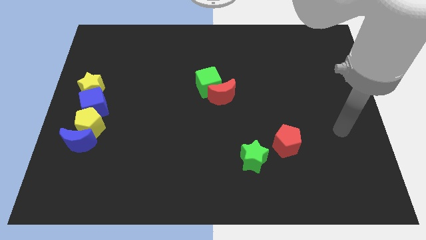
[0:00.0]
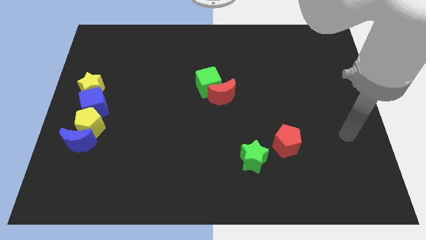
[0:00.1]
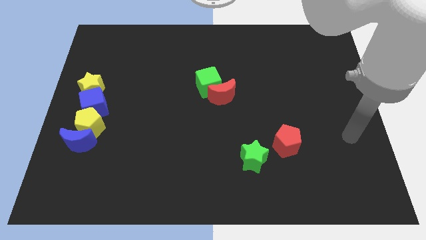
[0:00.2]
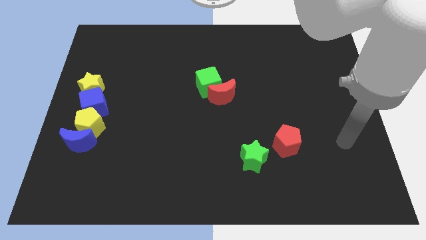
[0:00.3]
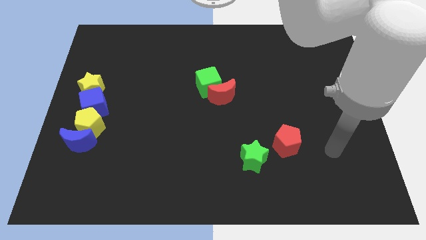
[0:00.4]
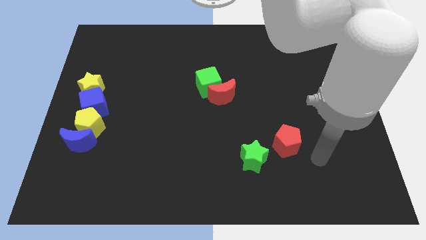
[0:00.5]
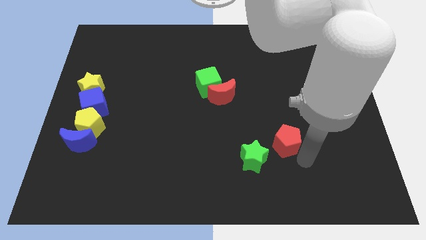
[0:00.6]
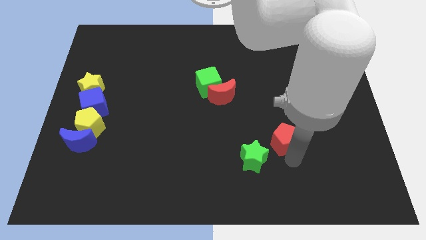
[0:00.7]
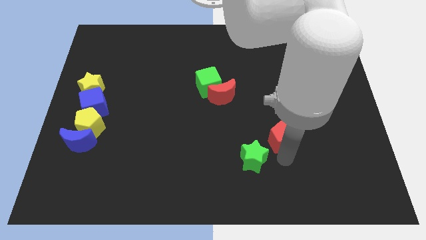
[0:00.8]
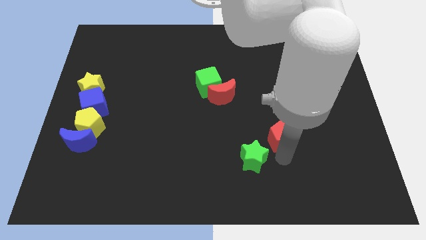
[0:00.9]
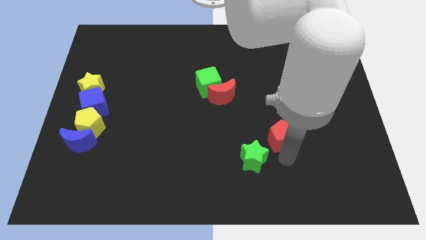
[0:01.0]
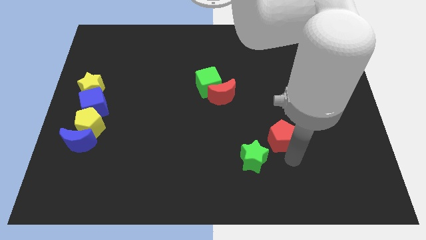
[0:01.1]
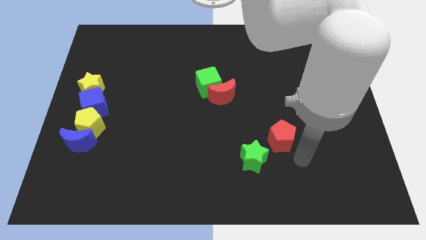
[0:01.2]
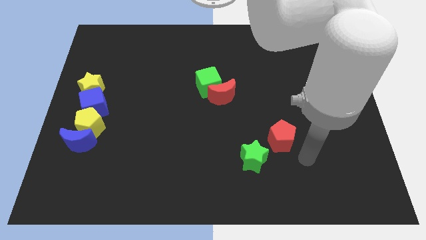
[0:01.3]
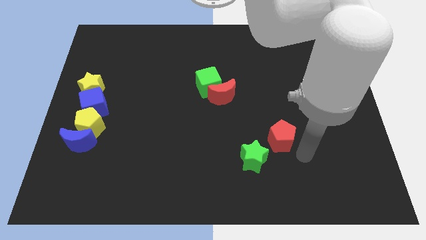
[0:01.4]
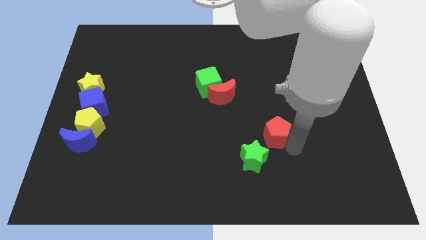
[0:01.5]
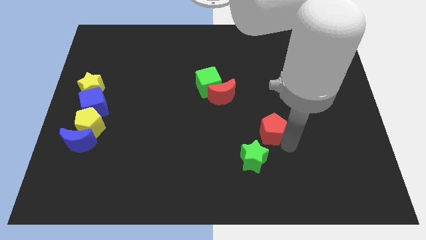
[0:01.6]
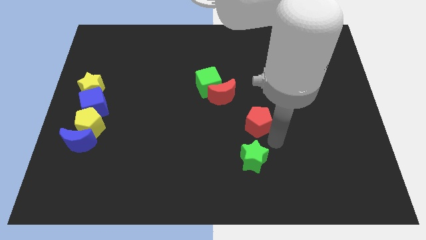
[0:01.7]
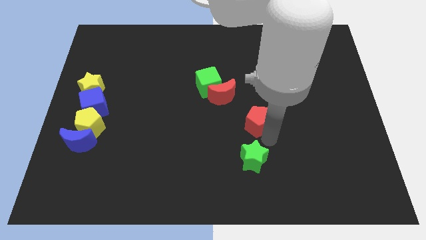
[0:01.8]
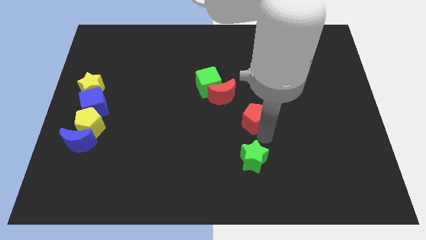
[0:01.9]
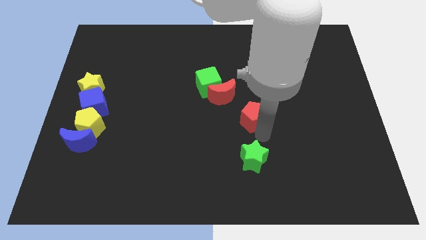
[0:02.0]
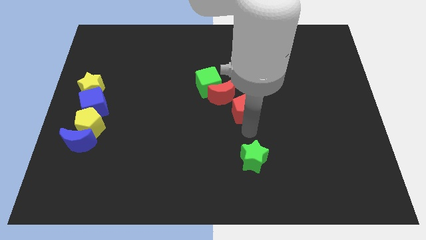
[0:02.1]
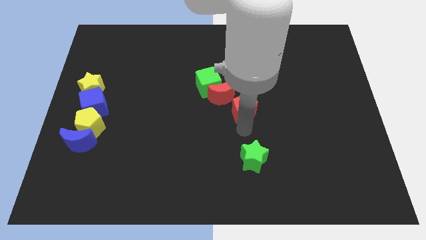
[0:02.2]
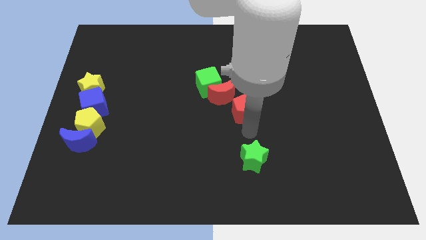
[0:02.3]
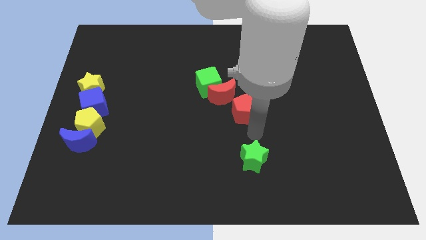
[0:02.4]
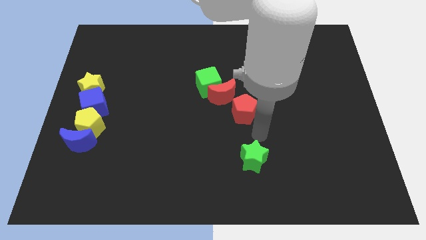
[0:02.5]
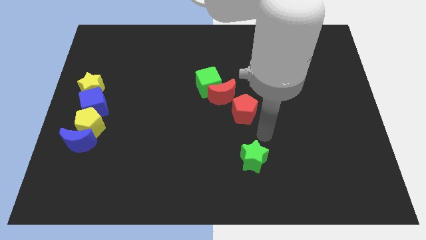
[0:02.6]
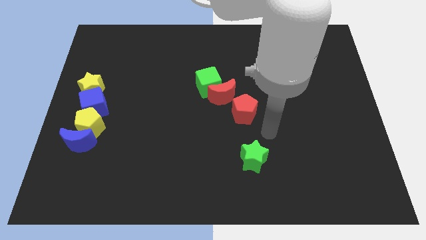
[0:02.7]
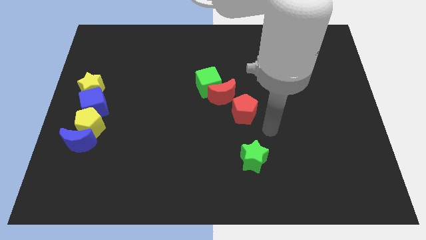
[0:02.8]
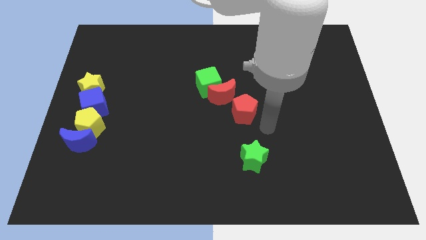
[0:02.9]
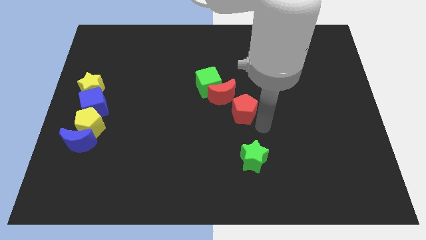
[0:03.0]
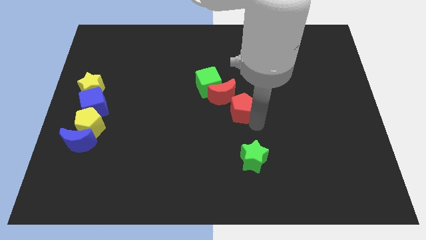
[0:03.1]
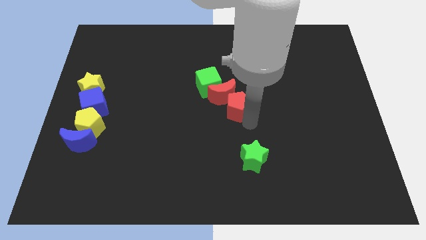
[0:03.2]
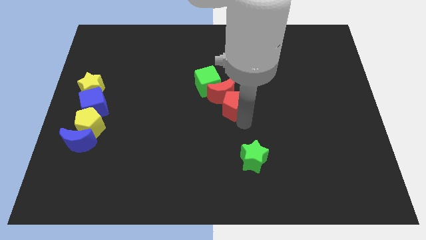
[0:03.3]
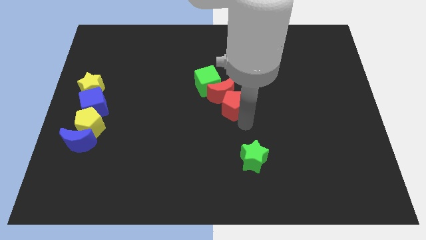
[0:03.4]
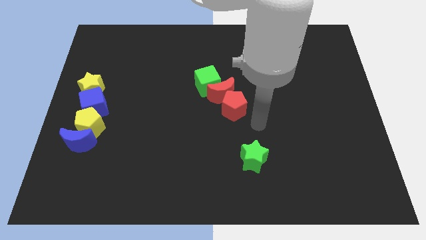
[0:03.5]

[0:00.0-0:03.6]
push the red pentagon into the red crescent

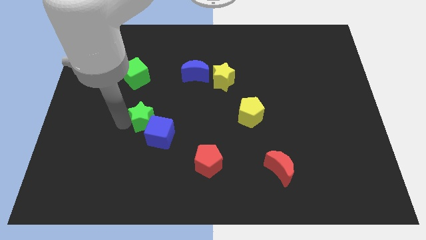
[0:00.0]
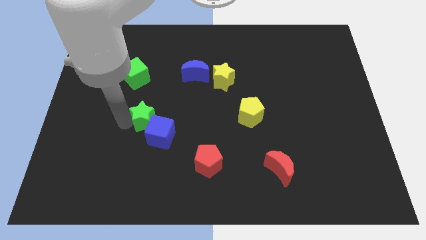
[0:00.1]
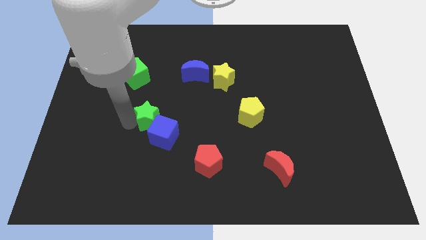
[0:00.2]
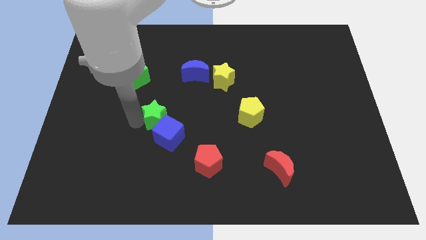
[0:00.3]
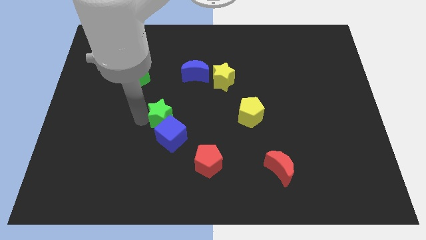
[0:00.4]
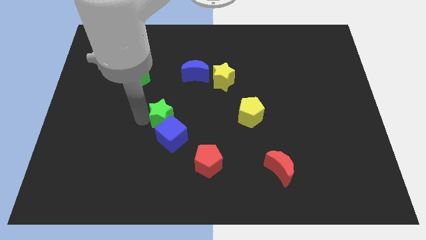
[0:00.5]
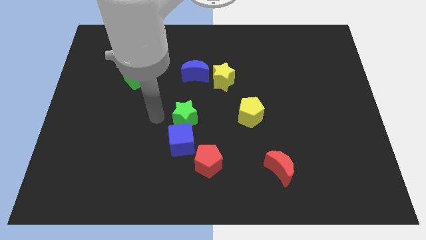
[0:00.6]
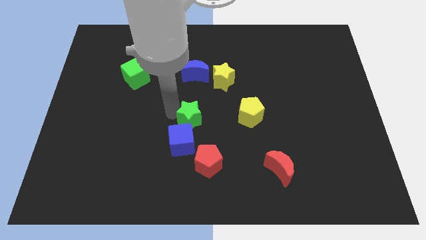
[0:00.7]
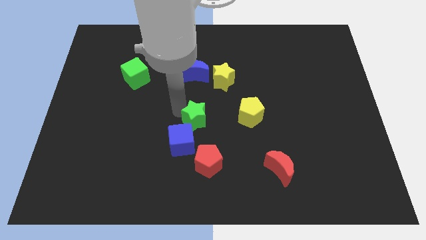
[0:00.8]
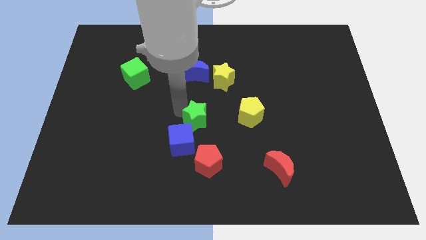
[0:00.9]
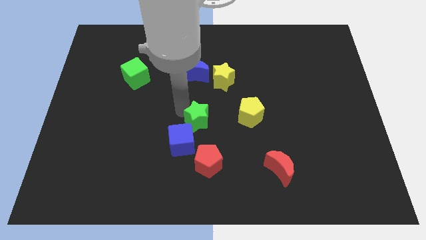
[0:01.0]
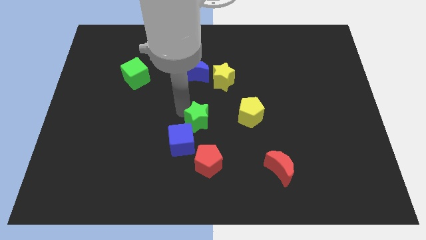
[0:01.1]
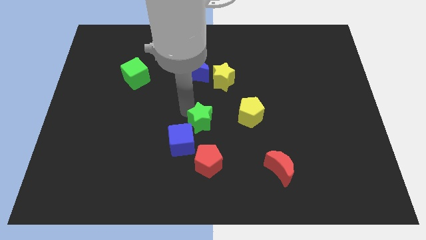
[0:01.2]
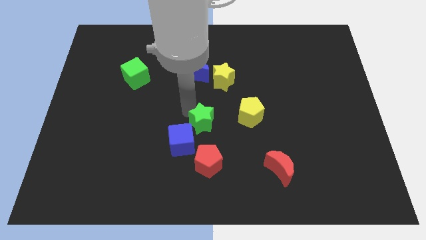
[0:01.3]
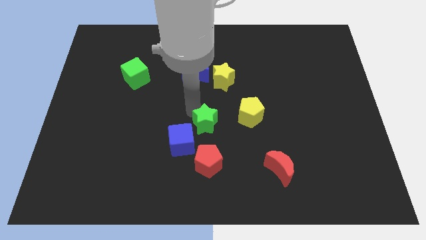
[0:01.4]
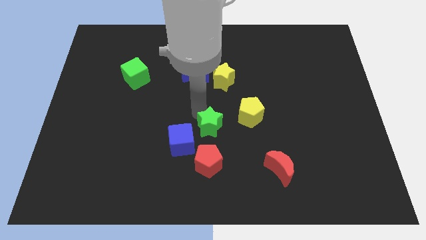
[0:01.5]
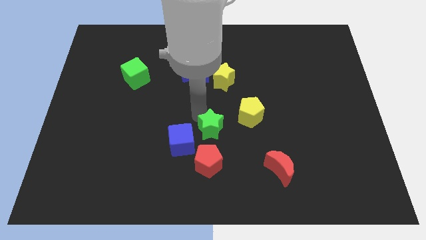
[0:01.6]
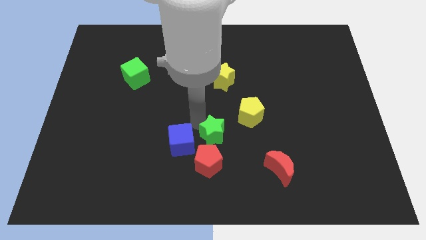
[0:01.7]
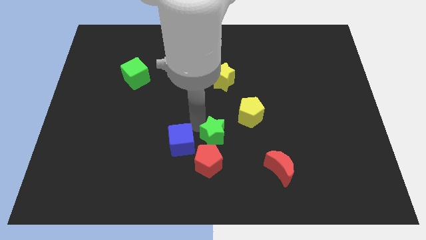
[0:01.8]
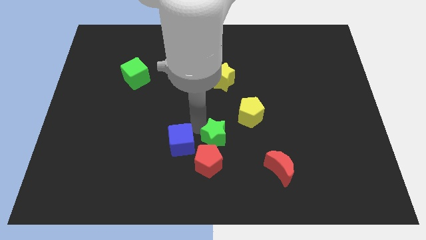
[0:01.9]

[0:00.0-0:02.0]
place the green star above the red pentagon

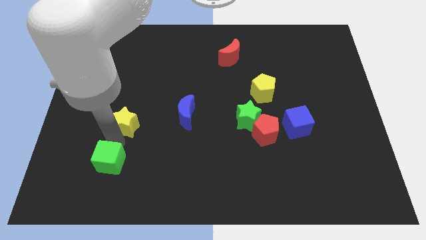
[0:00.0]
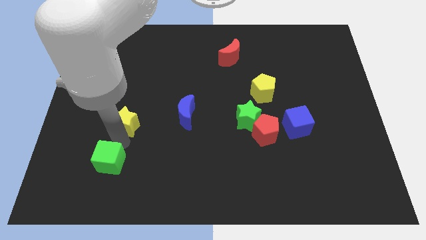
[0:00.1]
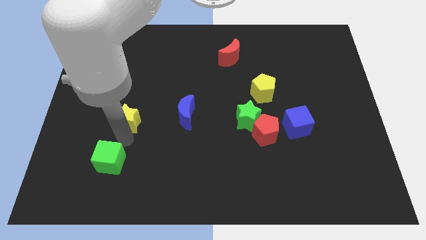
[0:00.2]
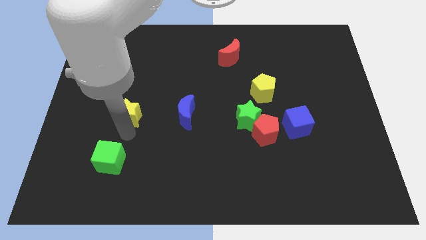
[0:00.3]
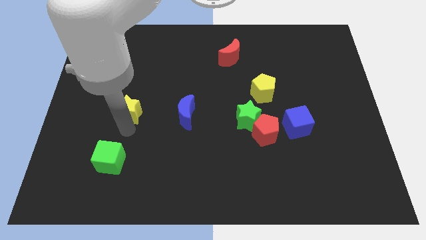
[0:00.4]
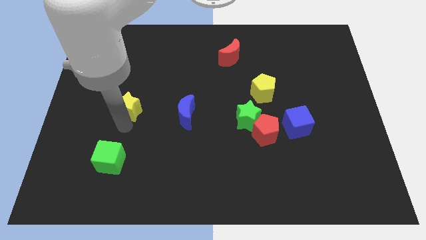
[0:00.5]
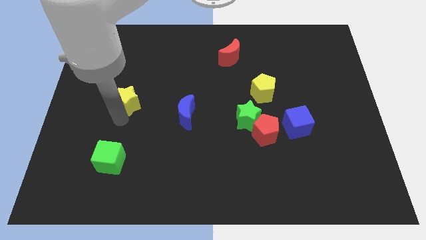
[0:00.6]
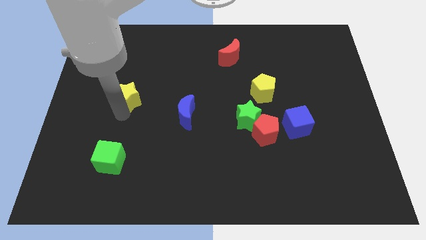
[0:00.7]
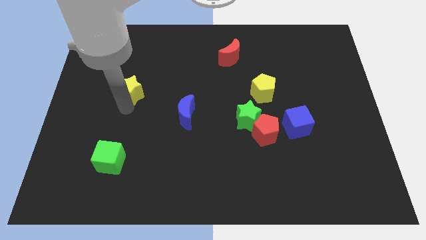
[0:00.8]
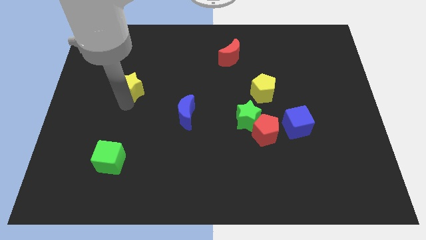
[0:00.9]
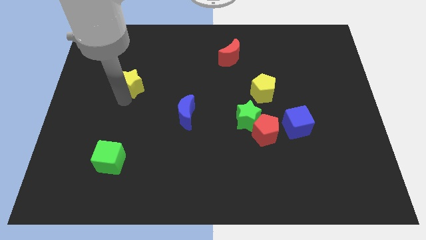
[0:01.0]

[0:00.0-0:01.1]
drag the yellow star towards up

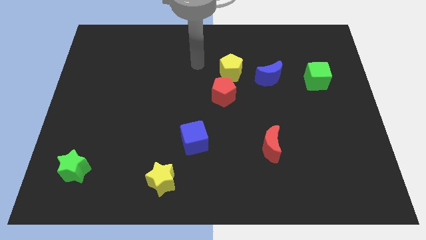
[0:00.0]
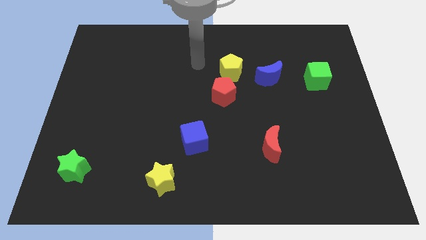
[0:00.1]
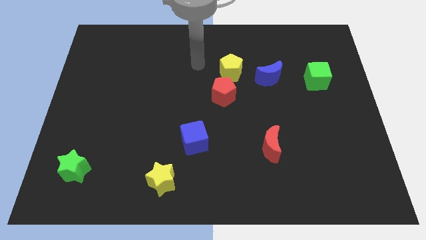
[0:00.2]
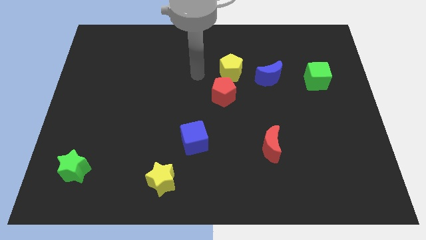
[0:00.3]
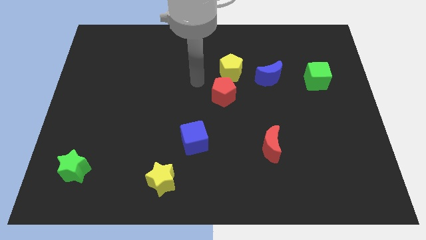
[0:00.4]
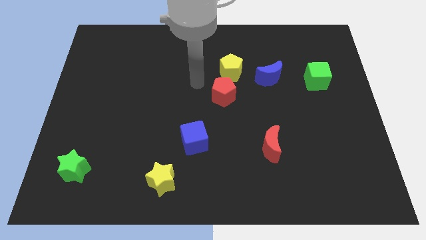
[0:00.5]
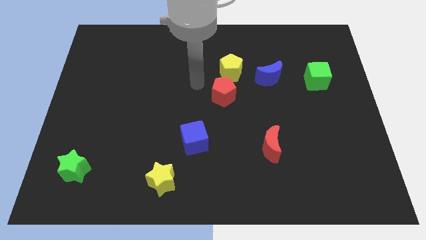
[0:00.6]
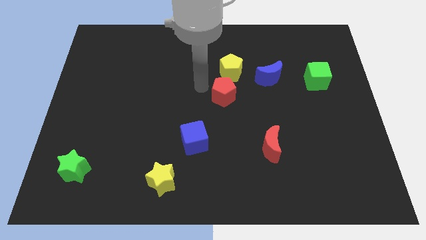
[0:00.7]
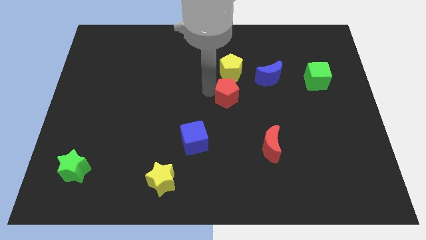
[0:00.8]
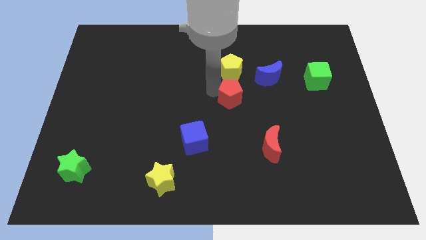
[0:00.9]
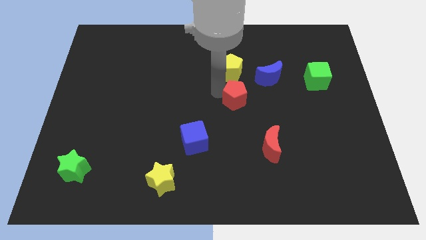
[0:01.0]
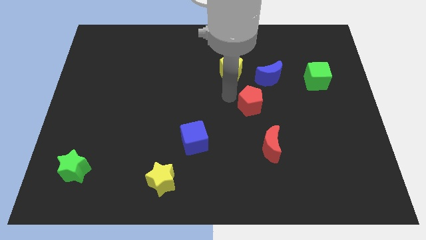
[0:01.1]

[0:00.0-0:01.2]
move the red pentagon slightly to the right

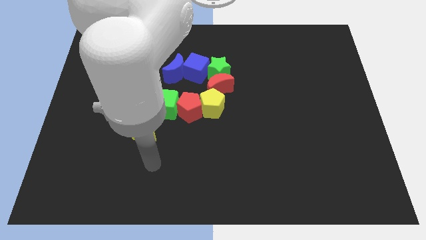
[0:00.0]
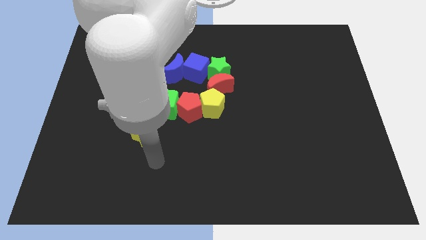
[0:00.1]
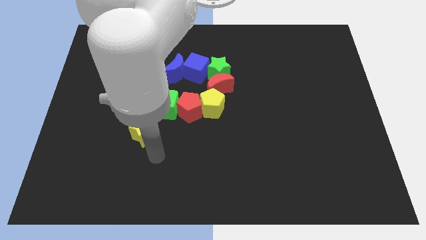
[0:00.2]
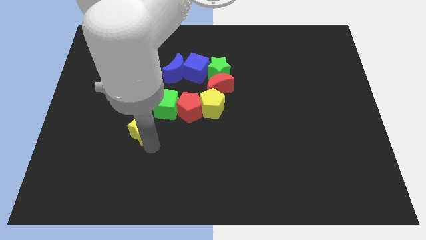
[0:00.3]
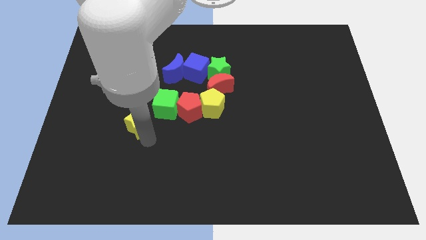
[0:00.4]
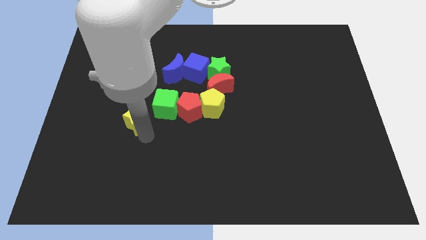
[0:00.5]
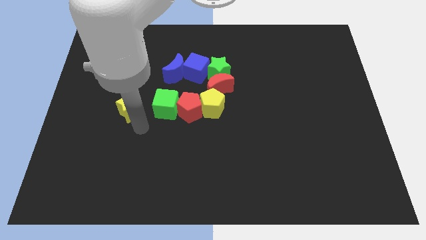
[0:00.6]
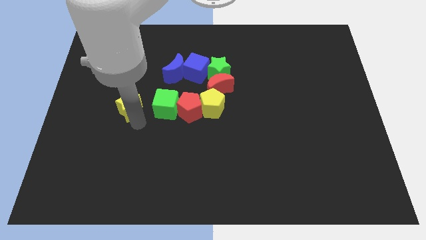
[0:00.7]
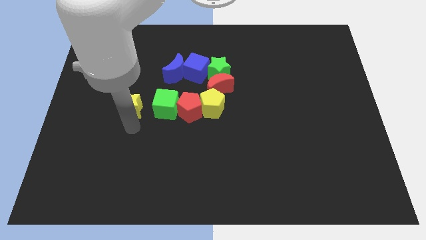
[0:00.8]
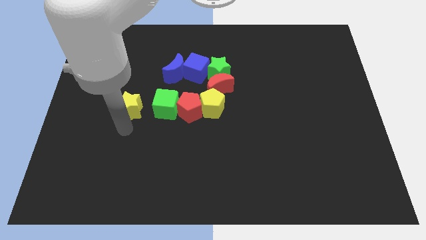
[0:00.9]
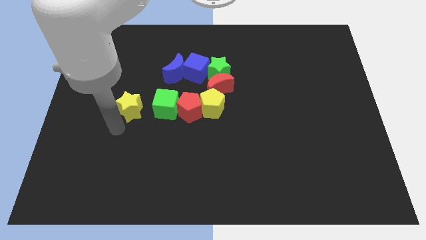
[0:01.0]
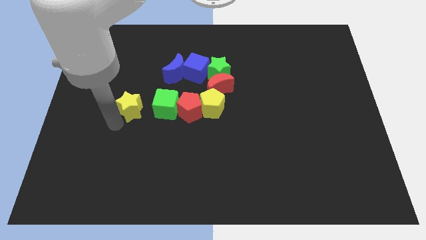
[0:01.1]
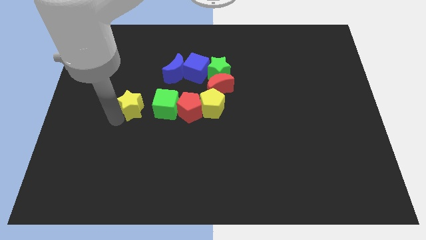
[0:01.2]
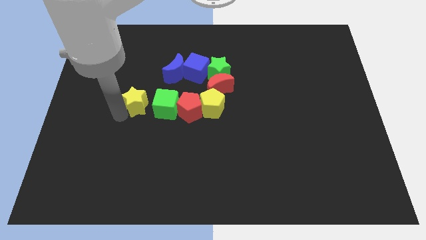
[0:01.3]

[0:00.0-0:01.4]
place the yellow star to the left of the green cube
